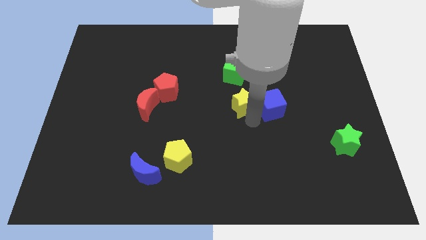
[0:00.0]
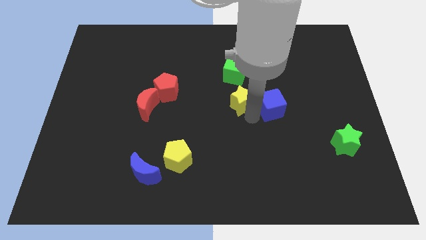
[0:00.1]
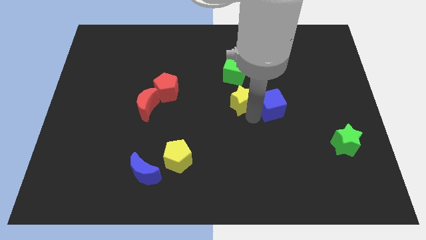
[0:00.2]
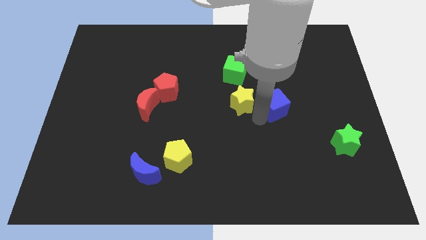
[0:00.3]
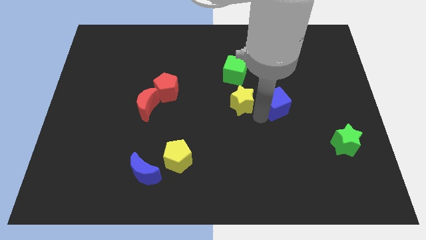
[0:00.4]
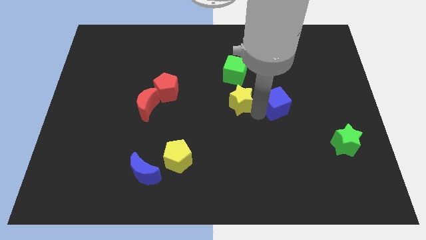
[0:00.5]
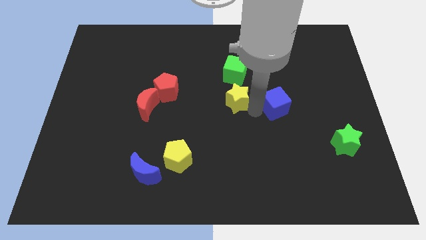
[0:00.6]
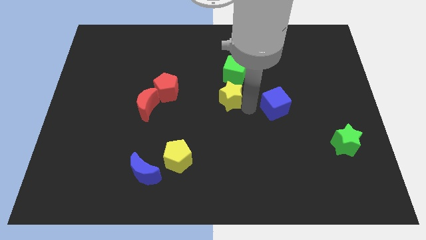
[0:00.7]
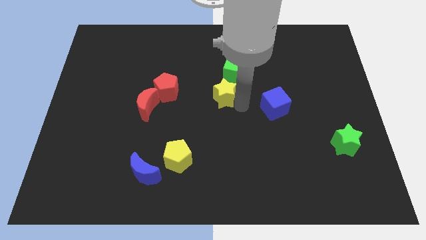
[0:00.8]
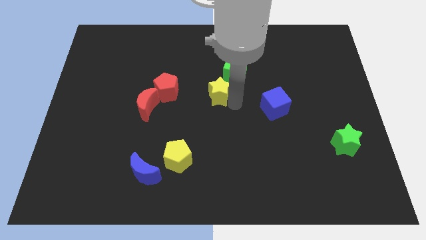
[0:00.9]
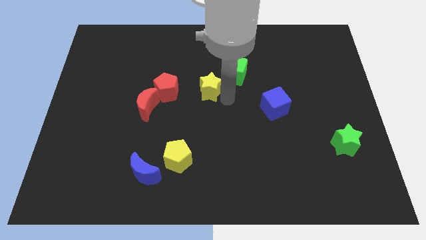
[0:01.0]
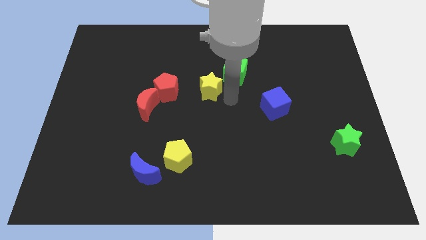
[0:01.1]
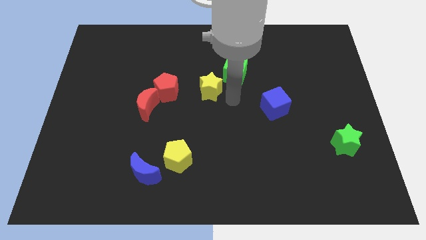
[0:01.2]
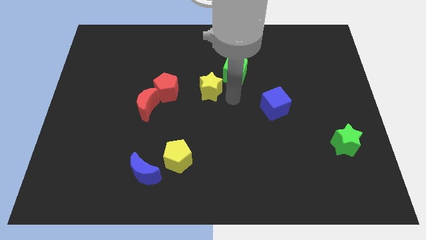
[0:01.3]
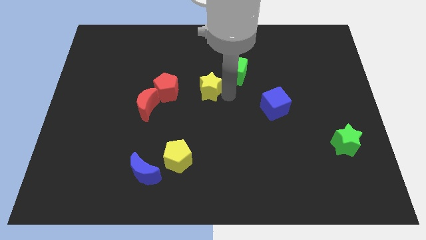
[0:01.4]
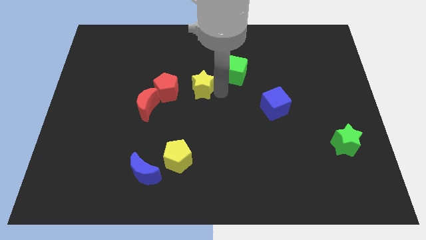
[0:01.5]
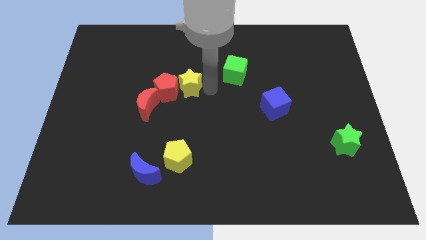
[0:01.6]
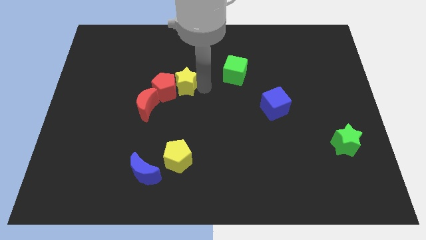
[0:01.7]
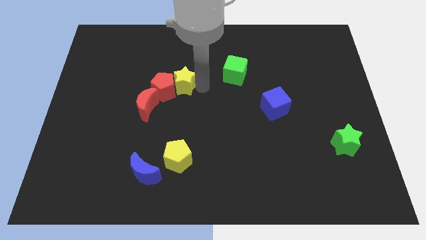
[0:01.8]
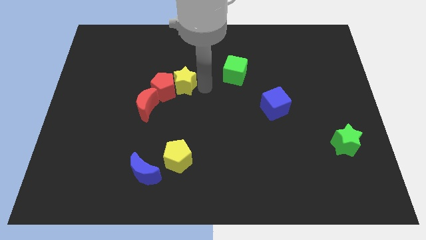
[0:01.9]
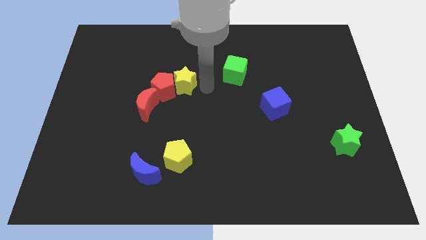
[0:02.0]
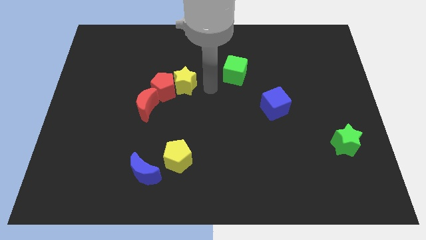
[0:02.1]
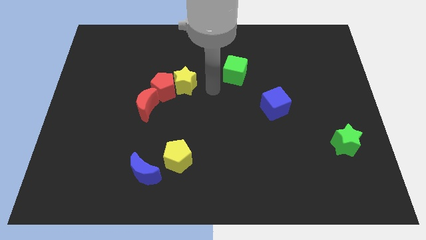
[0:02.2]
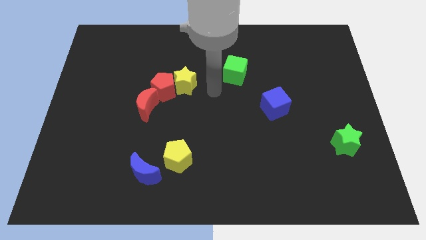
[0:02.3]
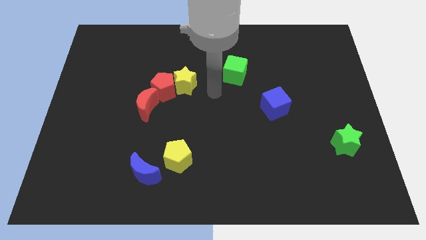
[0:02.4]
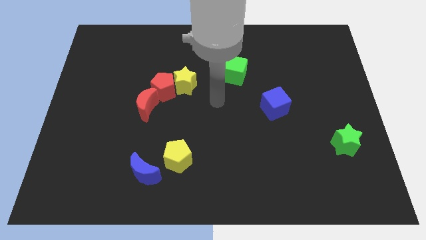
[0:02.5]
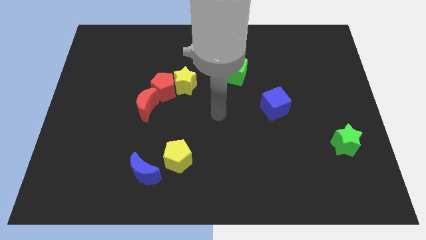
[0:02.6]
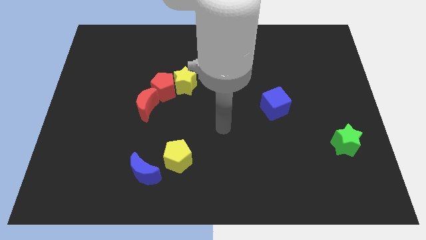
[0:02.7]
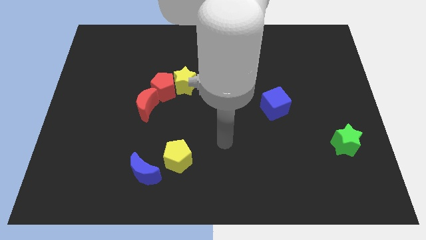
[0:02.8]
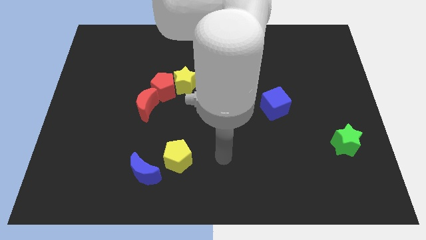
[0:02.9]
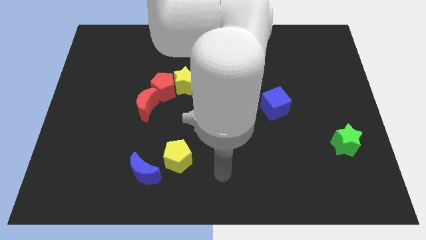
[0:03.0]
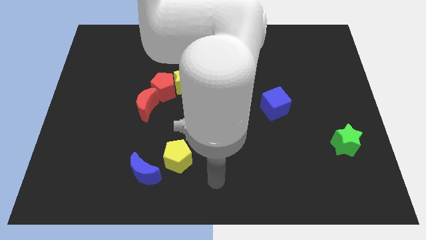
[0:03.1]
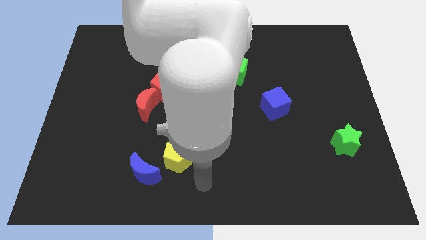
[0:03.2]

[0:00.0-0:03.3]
place the yellow star to the right of red pentagon

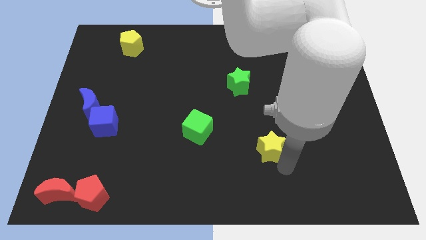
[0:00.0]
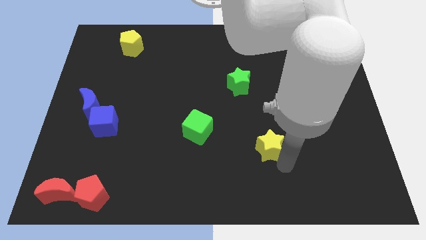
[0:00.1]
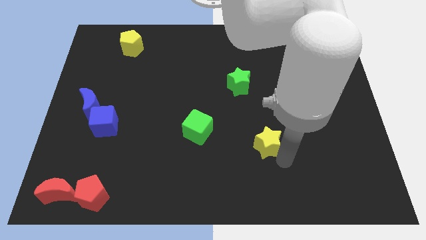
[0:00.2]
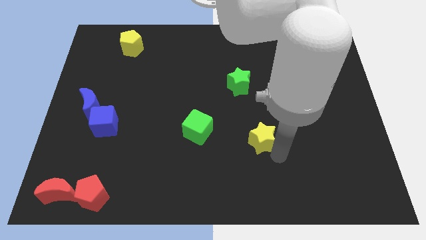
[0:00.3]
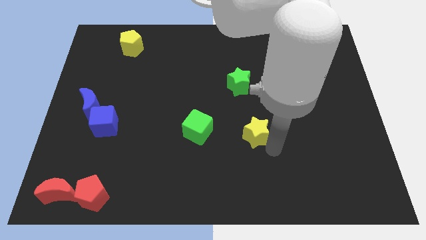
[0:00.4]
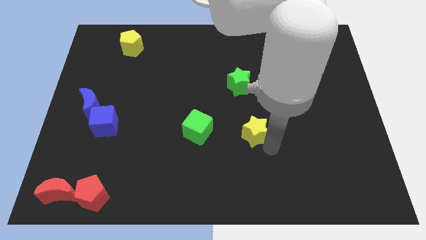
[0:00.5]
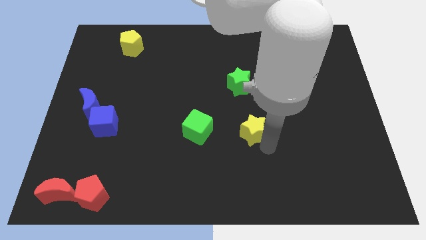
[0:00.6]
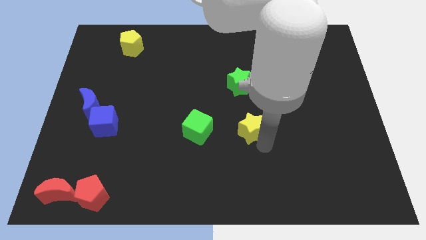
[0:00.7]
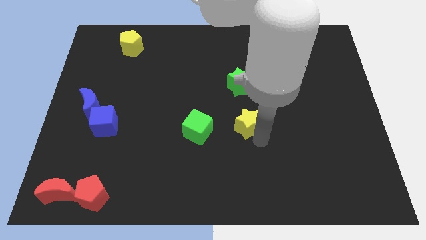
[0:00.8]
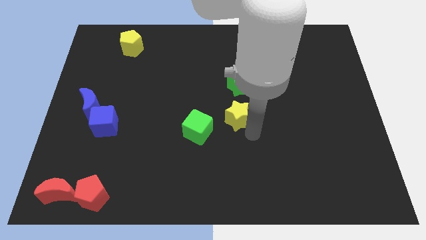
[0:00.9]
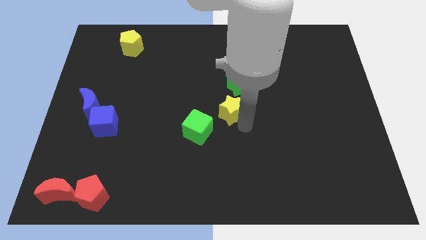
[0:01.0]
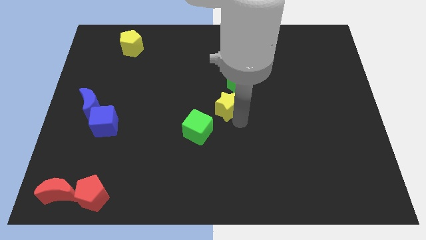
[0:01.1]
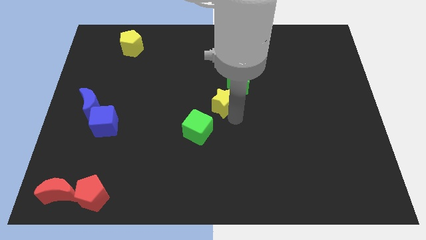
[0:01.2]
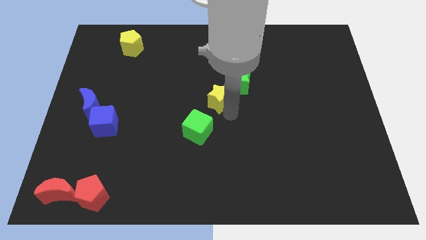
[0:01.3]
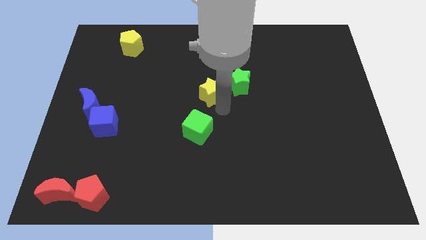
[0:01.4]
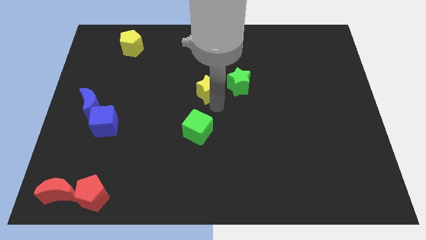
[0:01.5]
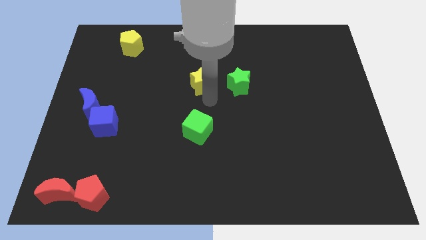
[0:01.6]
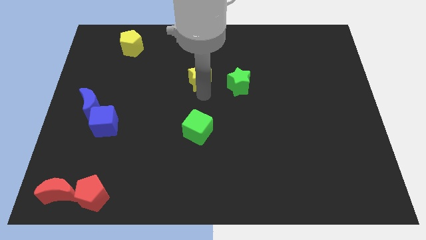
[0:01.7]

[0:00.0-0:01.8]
place yellow star above green cube

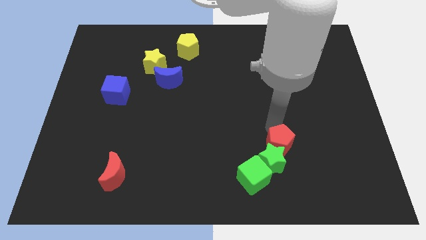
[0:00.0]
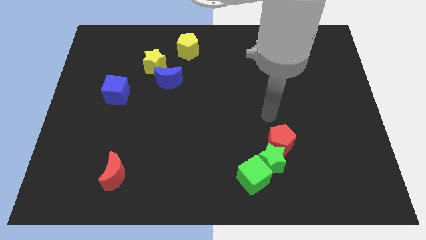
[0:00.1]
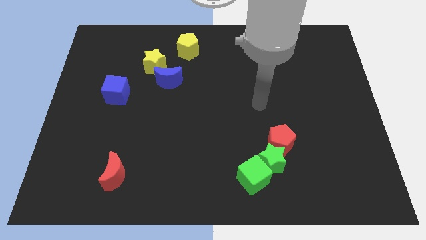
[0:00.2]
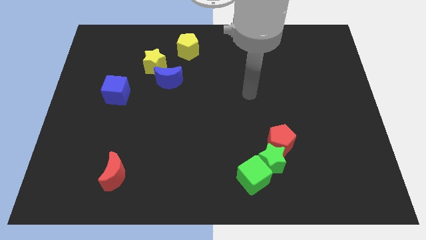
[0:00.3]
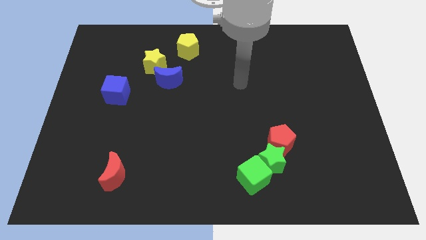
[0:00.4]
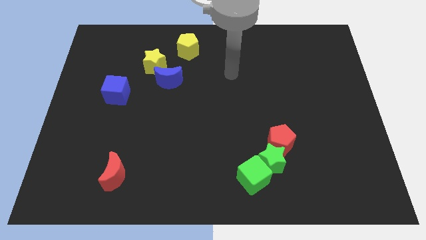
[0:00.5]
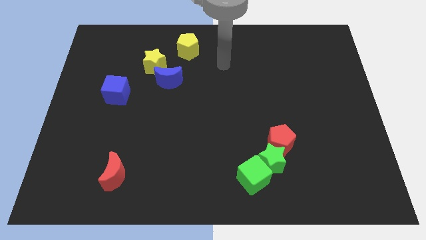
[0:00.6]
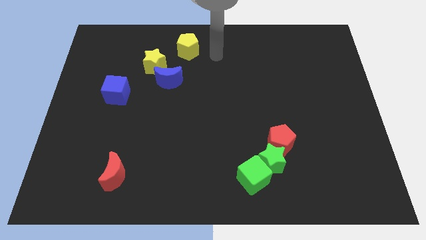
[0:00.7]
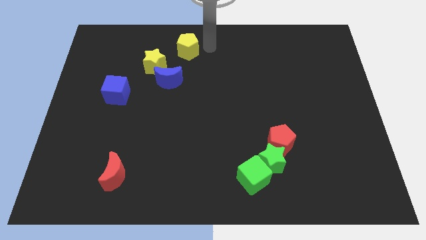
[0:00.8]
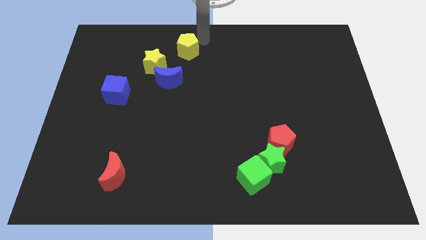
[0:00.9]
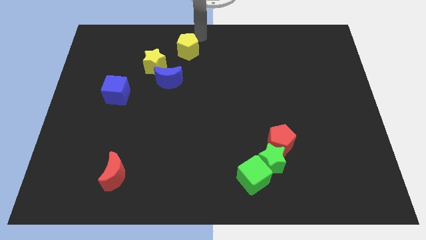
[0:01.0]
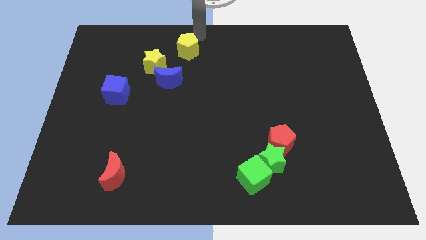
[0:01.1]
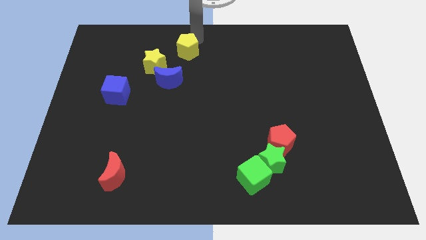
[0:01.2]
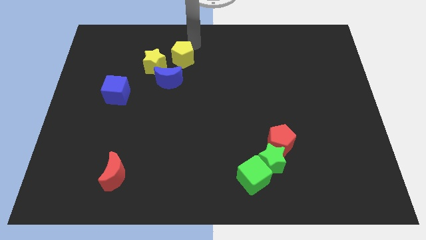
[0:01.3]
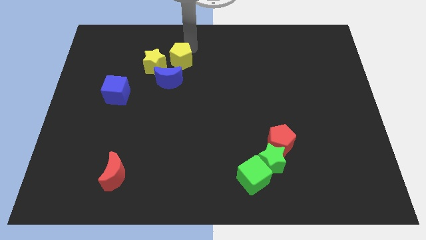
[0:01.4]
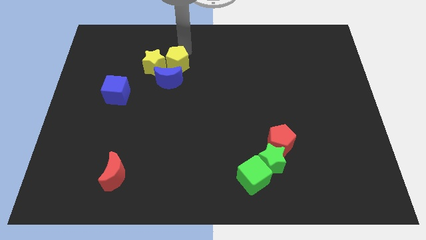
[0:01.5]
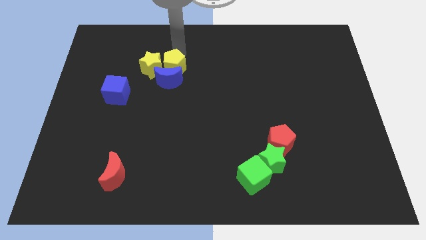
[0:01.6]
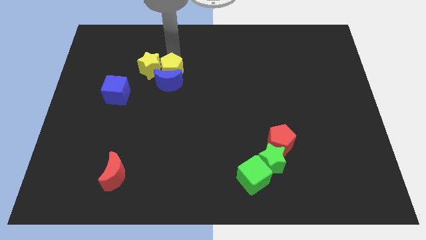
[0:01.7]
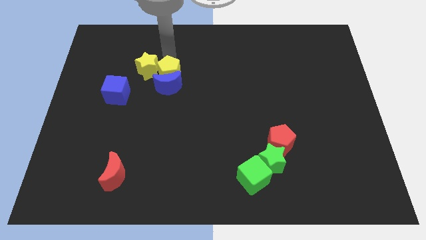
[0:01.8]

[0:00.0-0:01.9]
push the yellow penatgon into blue moon on top

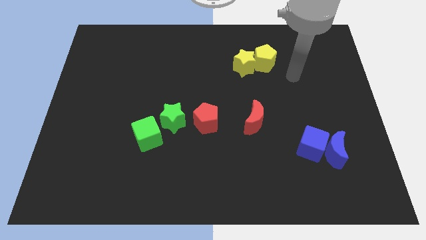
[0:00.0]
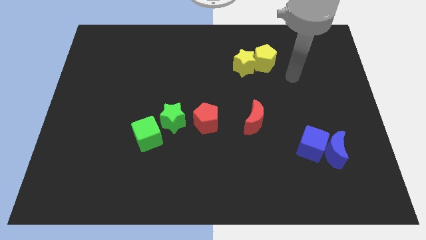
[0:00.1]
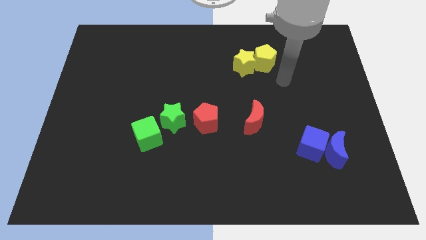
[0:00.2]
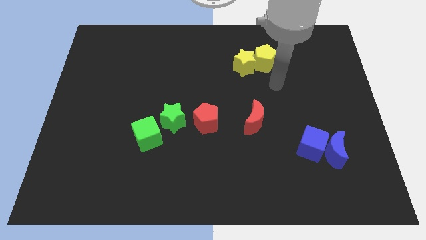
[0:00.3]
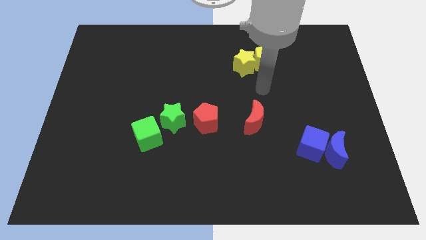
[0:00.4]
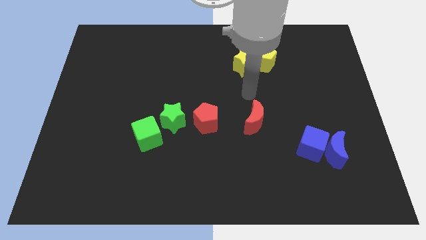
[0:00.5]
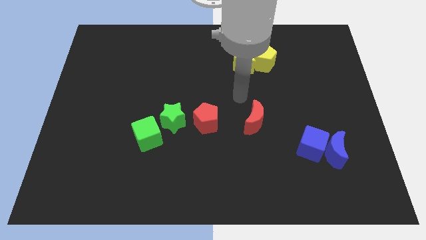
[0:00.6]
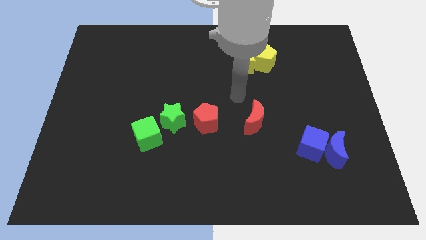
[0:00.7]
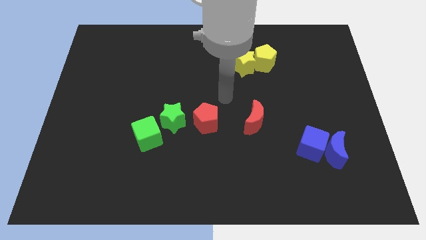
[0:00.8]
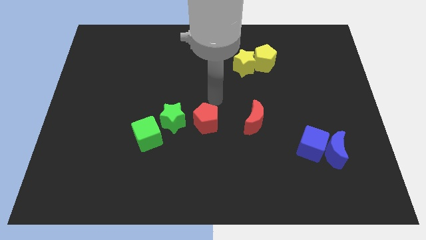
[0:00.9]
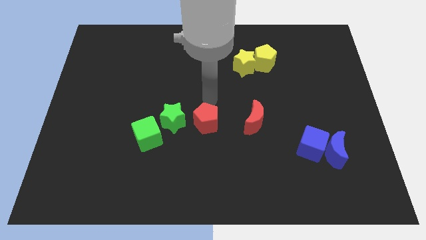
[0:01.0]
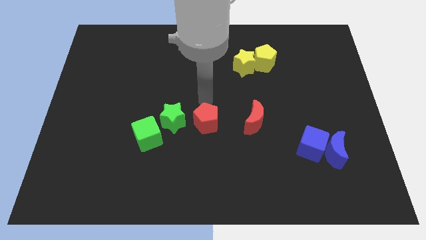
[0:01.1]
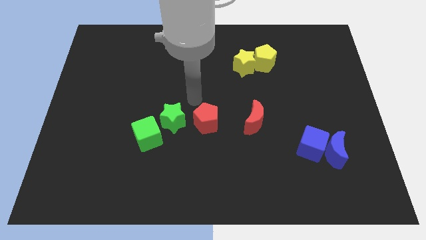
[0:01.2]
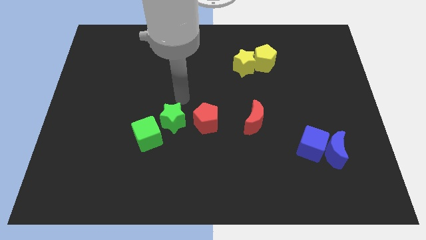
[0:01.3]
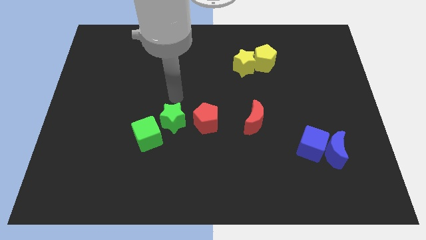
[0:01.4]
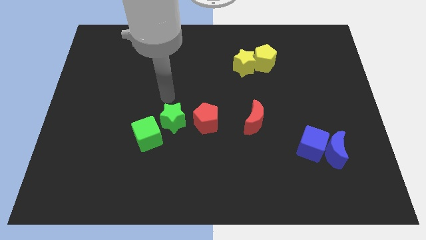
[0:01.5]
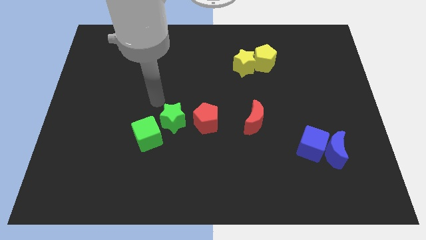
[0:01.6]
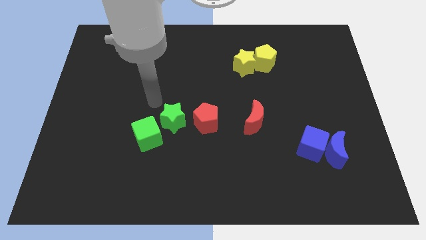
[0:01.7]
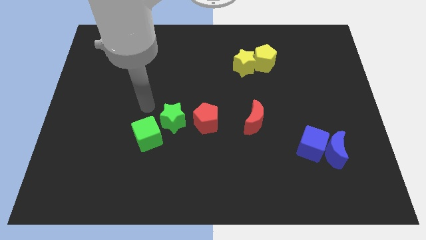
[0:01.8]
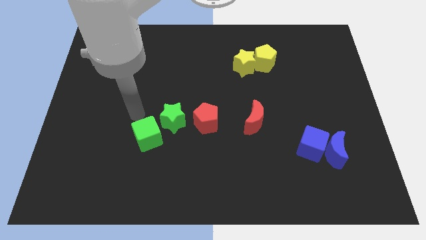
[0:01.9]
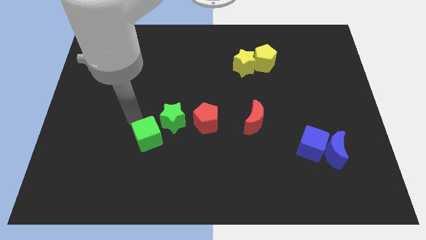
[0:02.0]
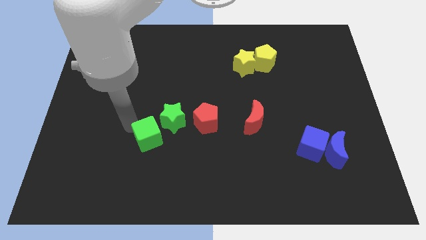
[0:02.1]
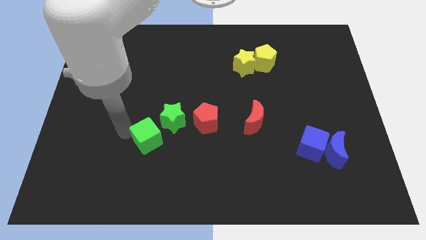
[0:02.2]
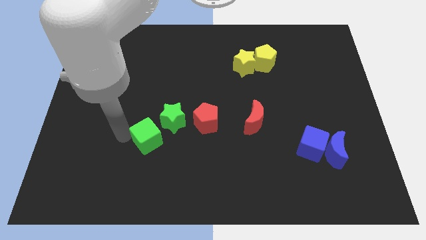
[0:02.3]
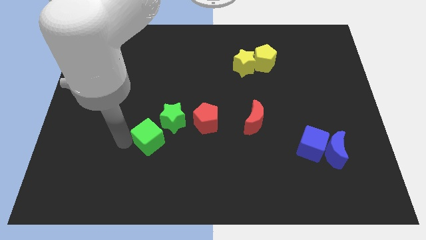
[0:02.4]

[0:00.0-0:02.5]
move your arm towards the blue cube
